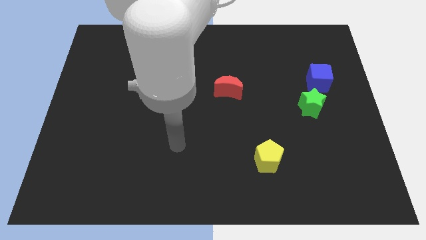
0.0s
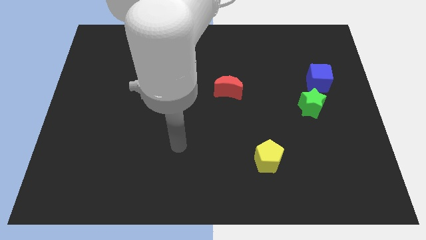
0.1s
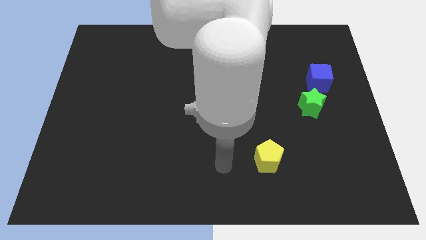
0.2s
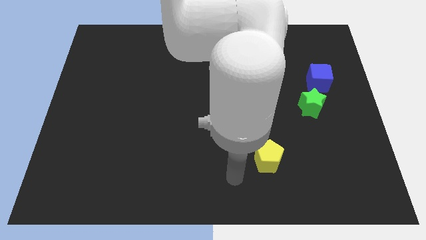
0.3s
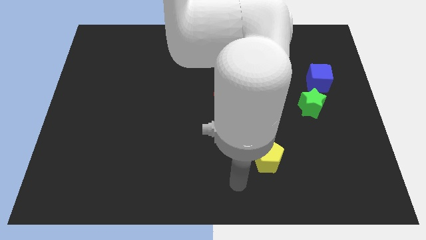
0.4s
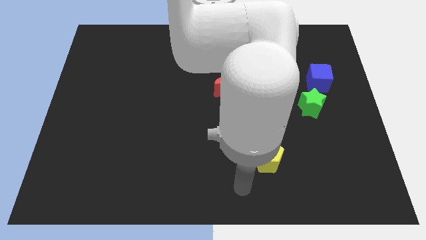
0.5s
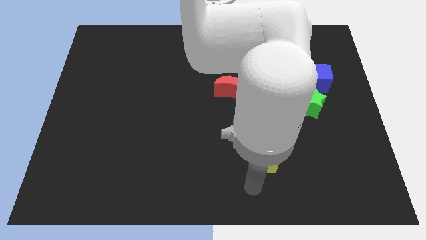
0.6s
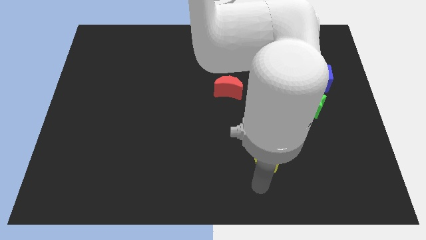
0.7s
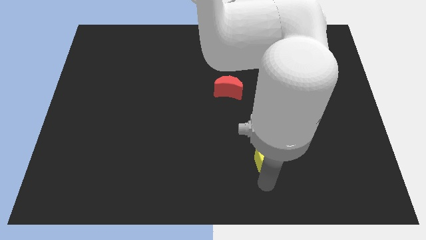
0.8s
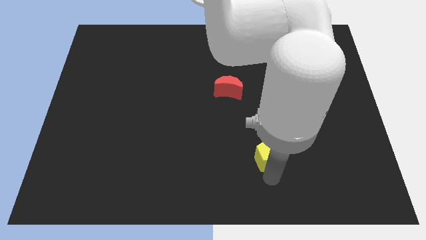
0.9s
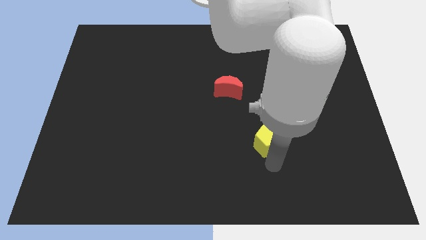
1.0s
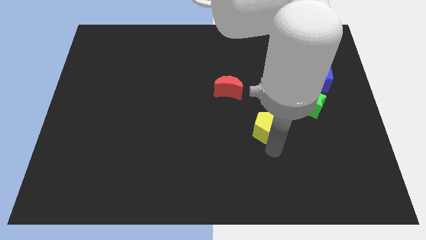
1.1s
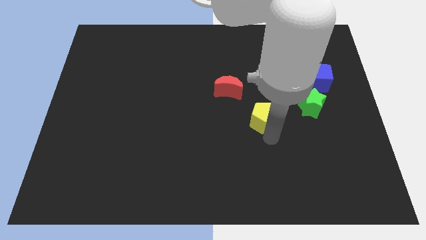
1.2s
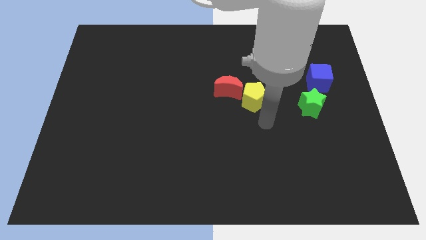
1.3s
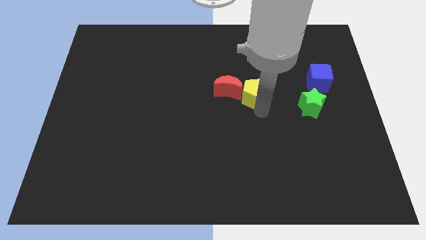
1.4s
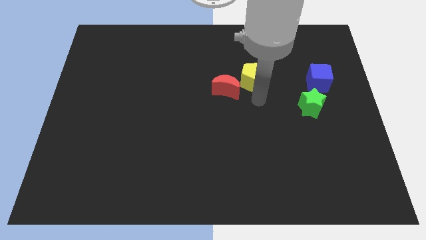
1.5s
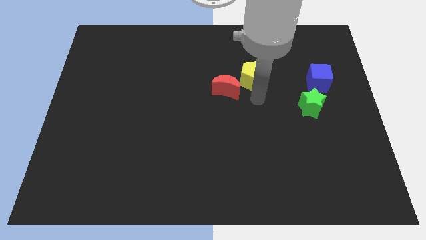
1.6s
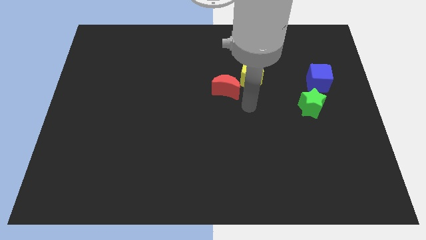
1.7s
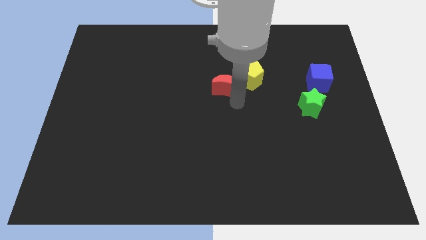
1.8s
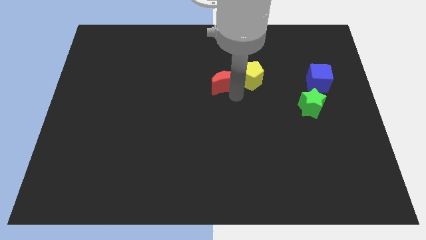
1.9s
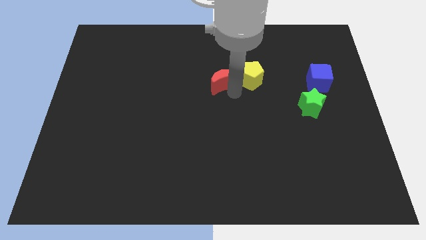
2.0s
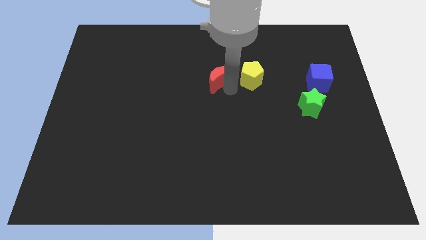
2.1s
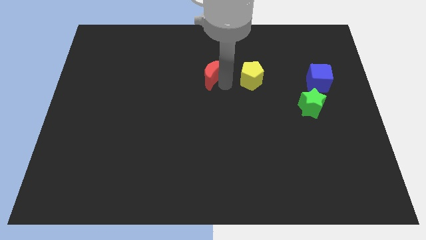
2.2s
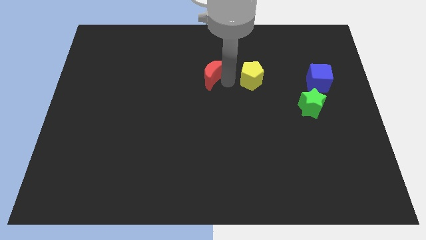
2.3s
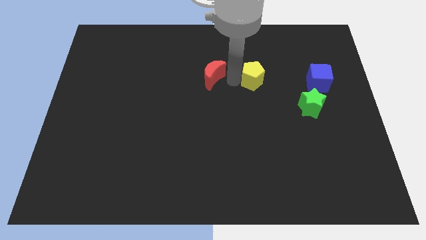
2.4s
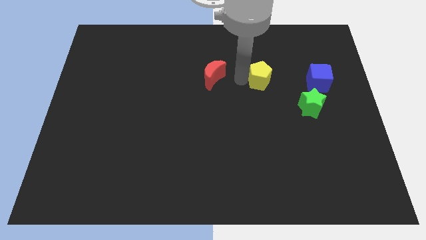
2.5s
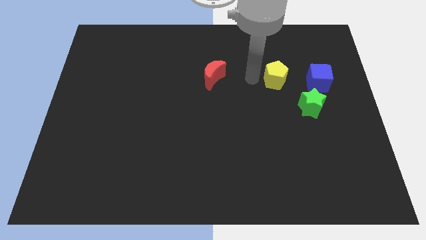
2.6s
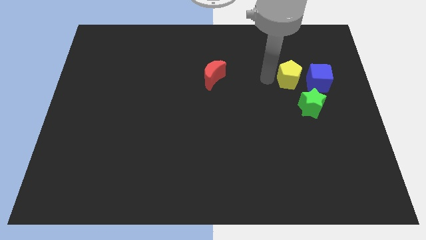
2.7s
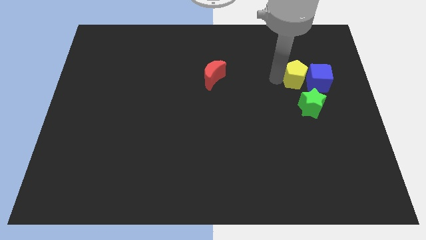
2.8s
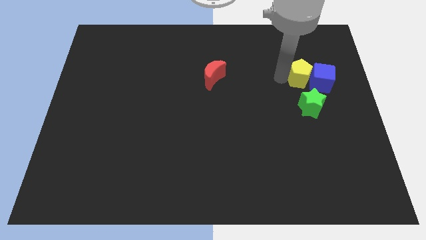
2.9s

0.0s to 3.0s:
move the pentagon to the blue cube

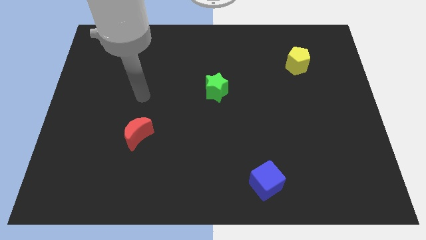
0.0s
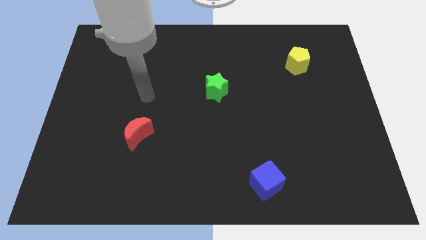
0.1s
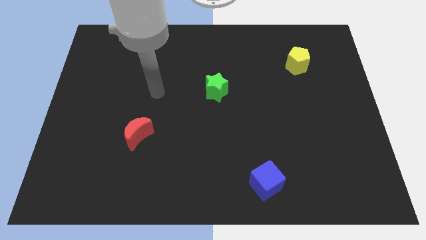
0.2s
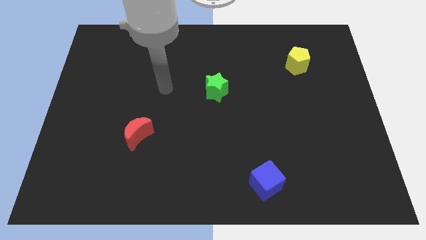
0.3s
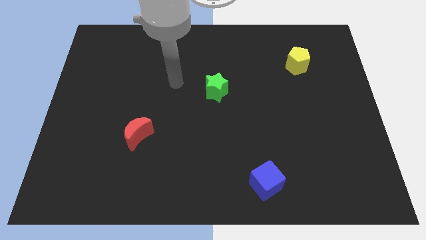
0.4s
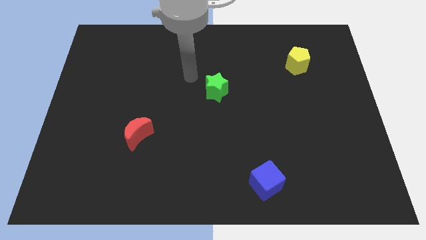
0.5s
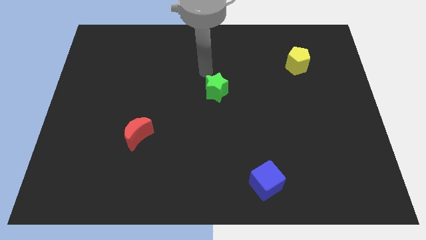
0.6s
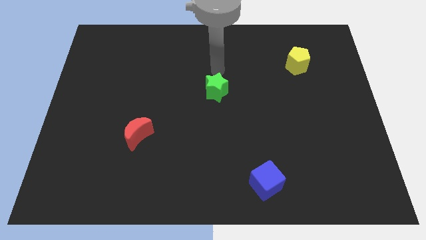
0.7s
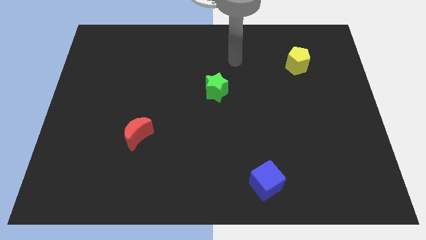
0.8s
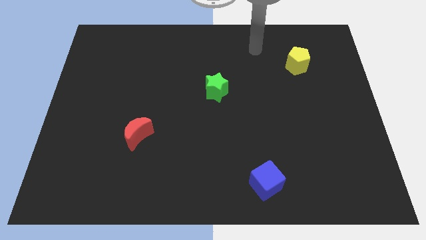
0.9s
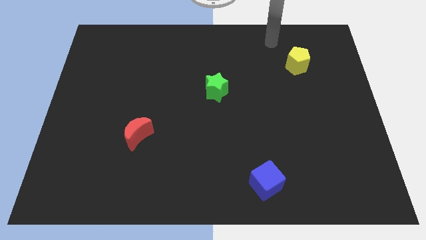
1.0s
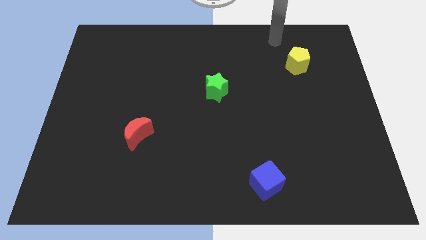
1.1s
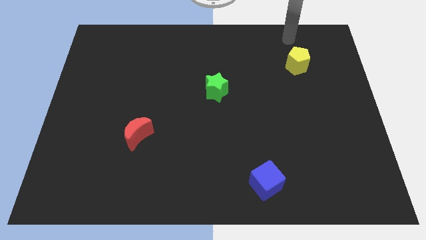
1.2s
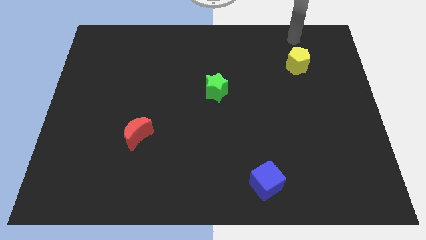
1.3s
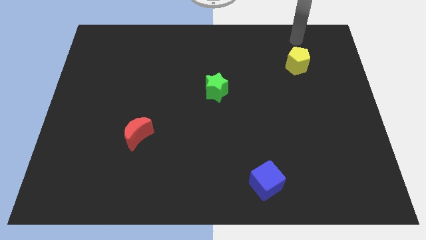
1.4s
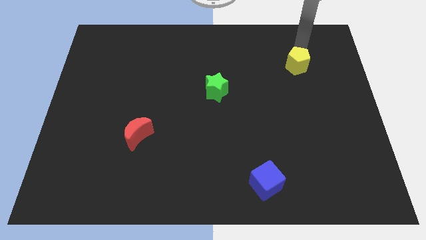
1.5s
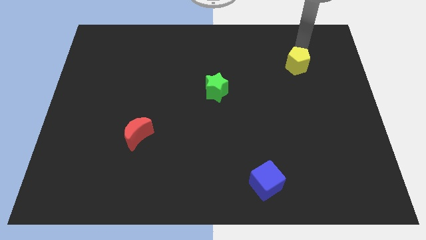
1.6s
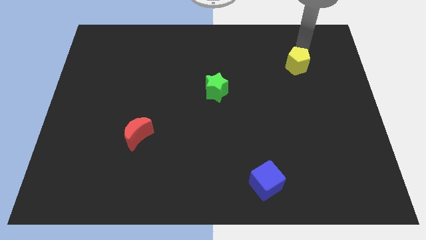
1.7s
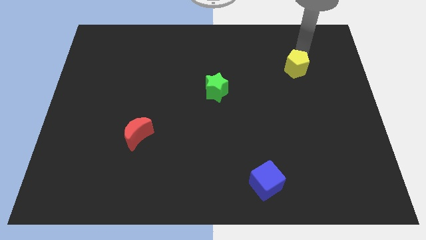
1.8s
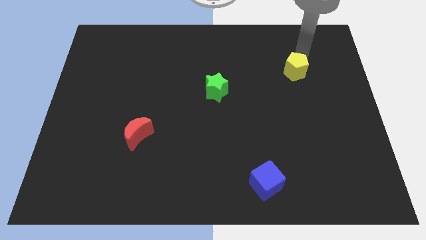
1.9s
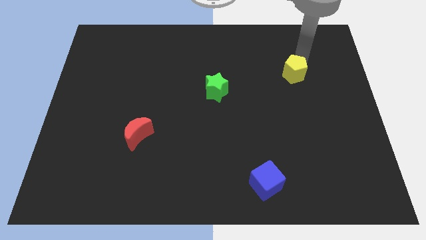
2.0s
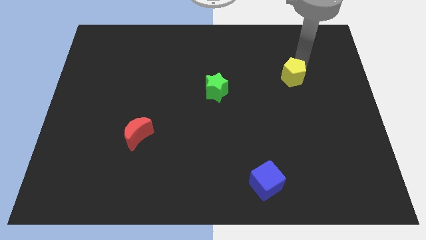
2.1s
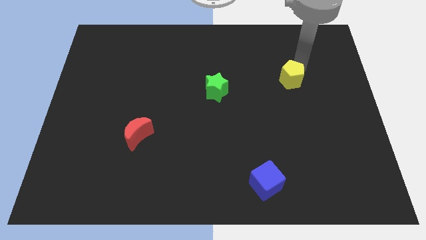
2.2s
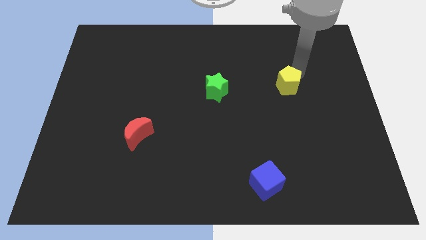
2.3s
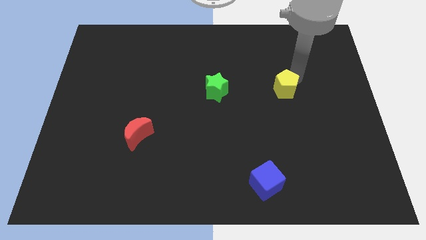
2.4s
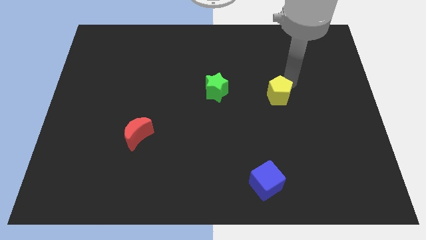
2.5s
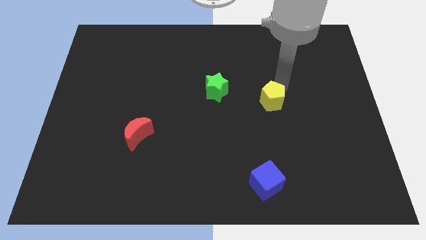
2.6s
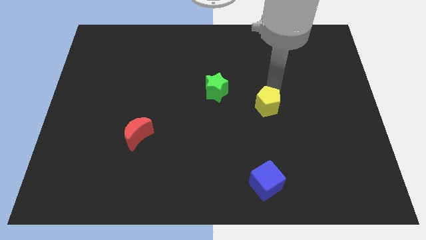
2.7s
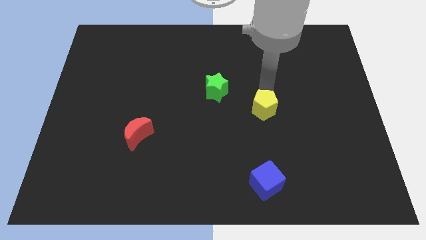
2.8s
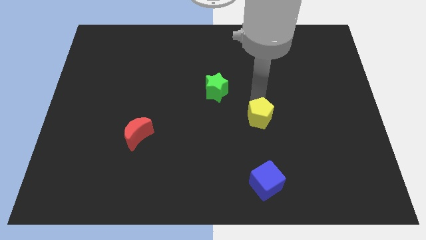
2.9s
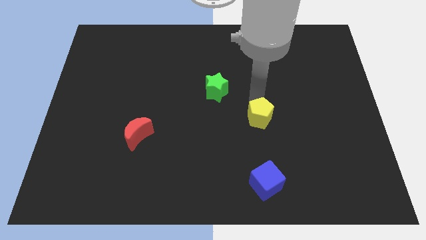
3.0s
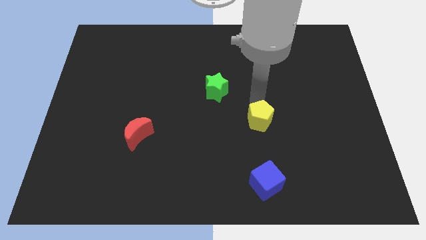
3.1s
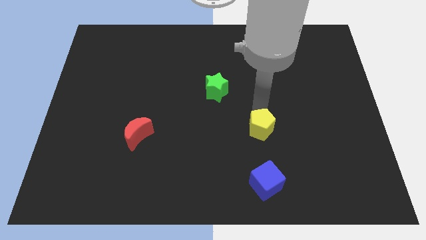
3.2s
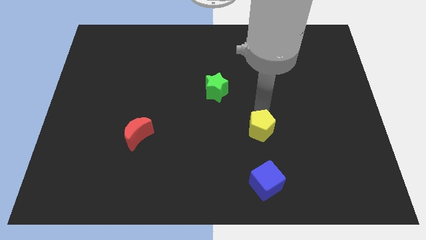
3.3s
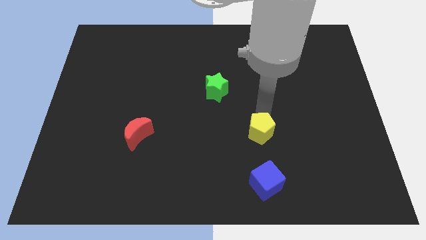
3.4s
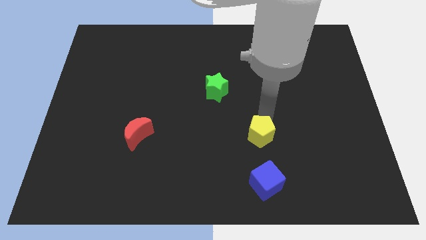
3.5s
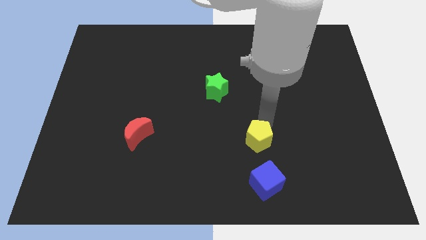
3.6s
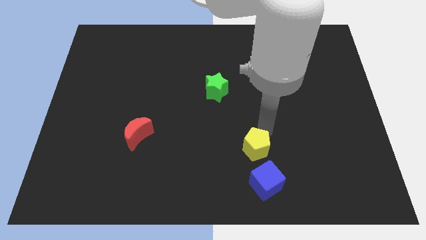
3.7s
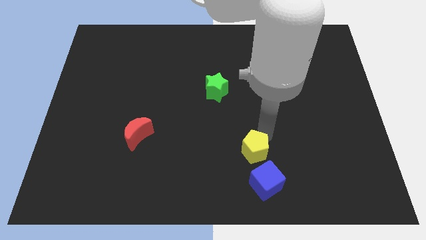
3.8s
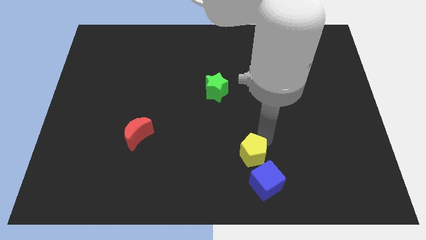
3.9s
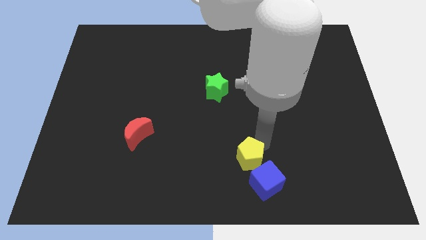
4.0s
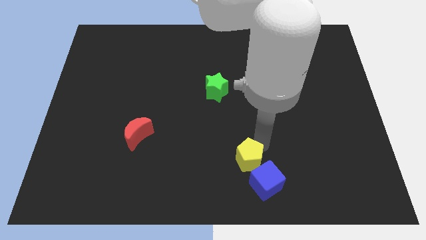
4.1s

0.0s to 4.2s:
move the yellow pentagon next to the cube

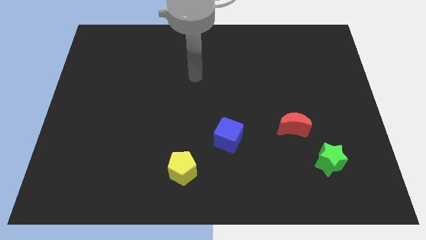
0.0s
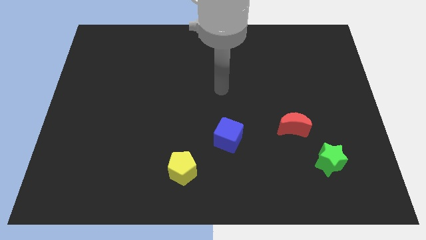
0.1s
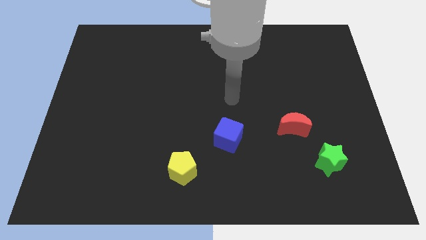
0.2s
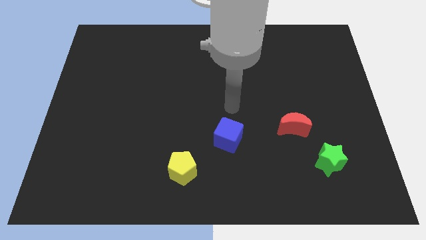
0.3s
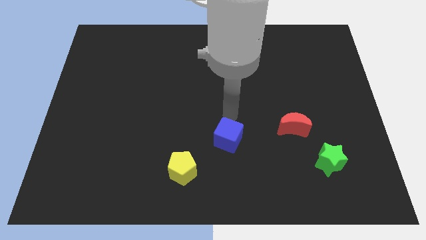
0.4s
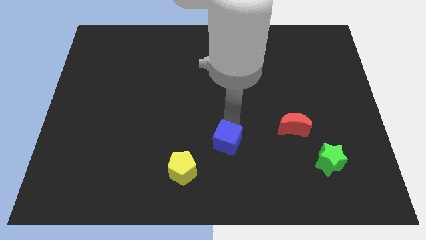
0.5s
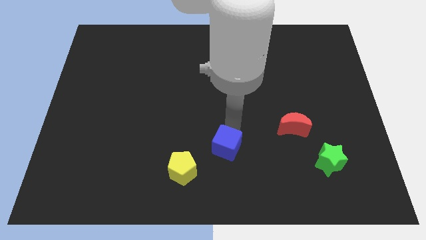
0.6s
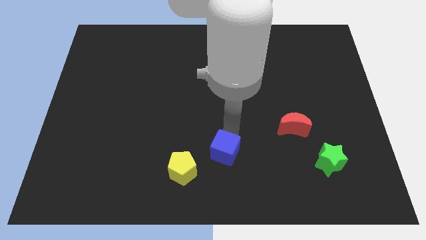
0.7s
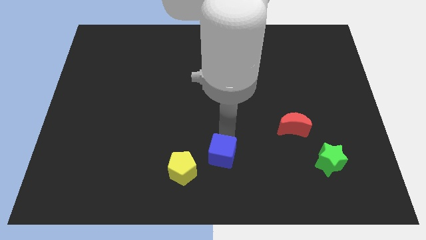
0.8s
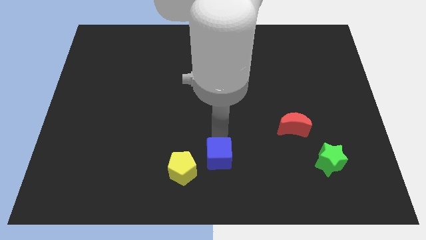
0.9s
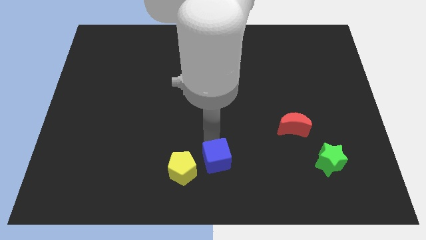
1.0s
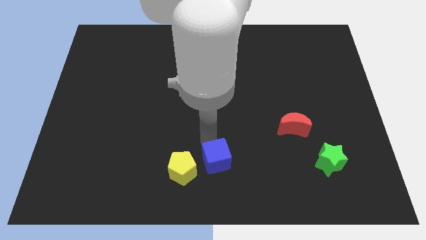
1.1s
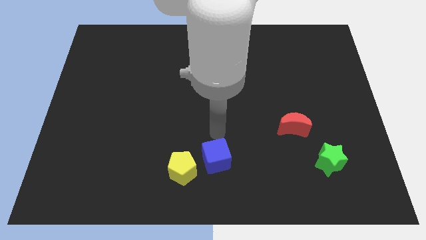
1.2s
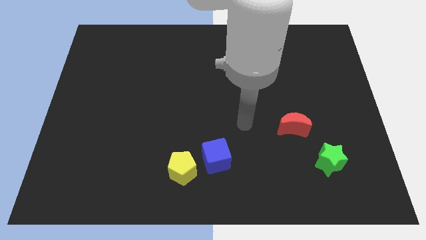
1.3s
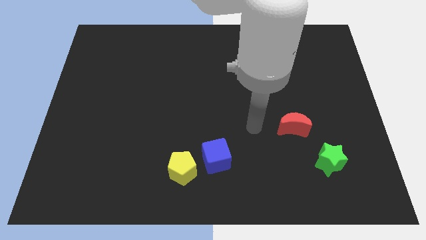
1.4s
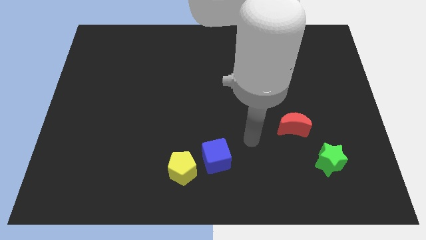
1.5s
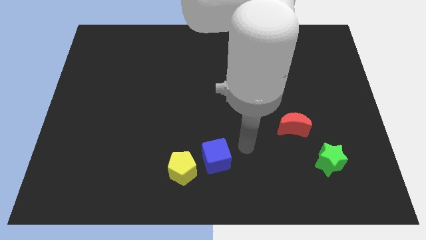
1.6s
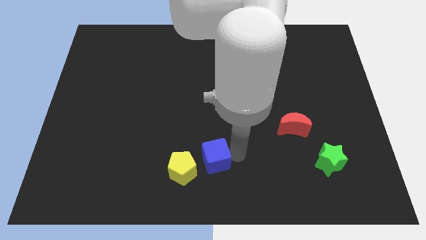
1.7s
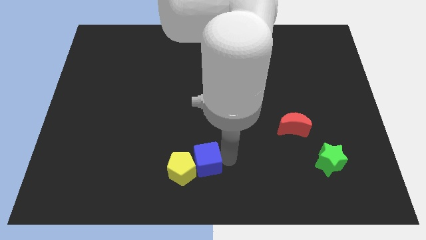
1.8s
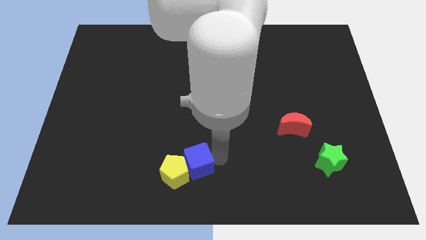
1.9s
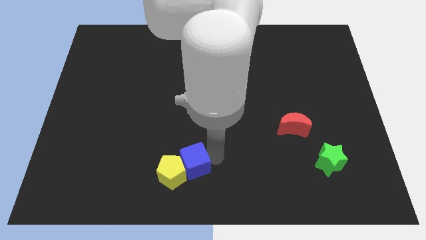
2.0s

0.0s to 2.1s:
push the blue cube next to the yellow block
